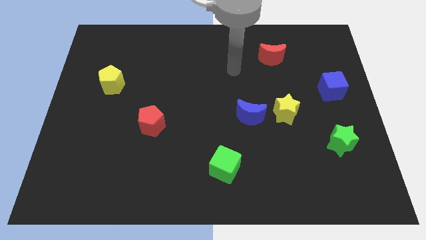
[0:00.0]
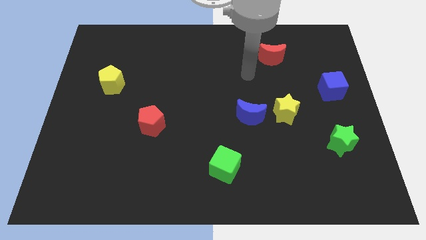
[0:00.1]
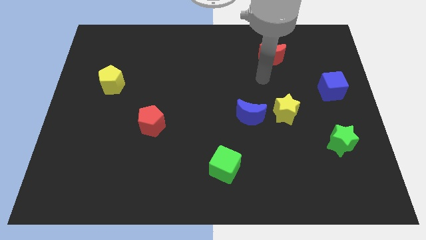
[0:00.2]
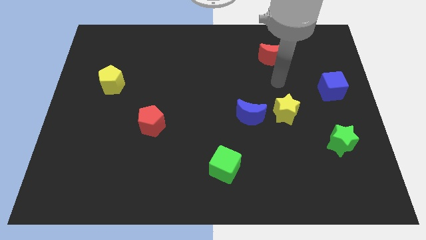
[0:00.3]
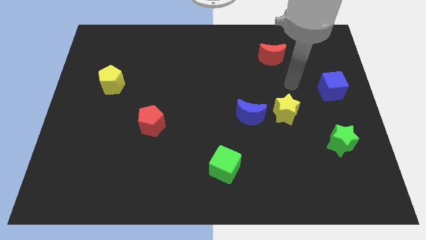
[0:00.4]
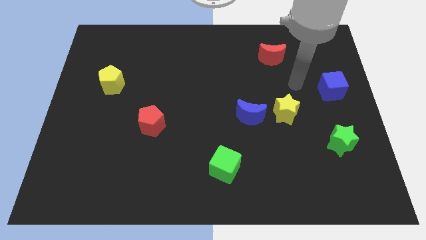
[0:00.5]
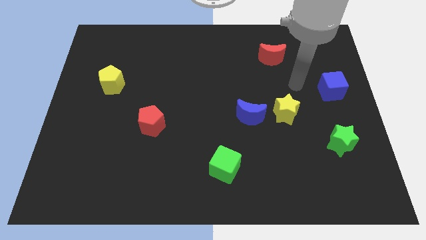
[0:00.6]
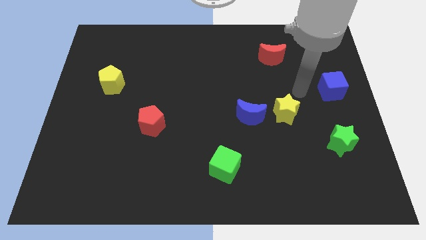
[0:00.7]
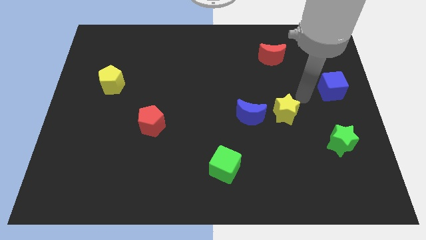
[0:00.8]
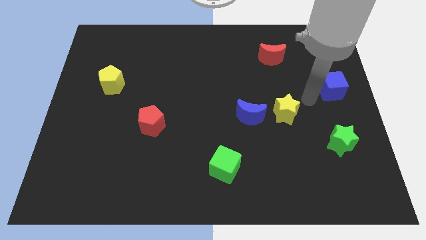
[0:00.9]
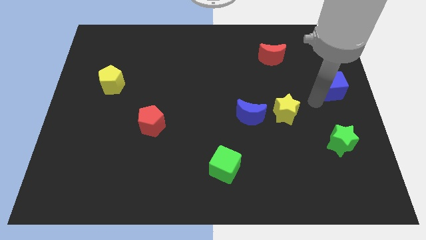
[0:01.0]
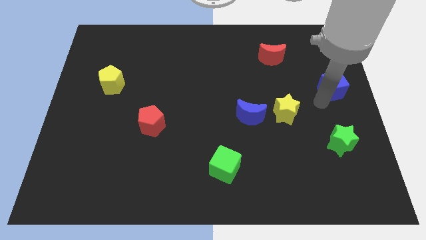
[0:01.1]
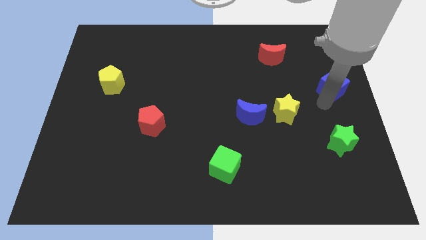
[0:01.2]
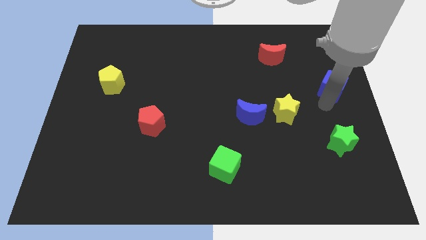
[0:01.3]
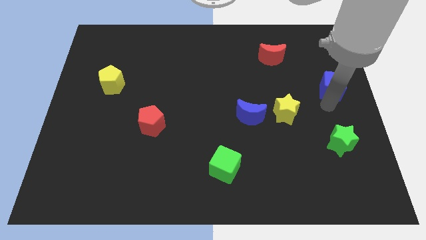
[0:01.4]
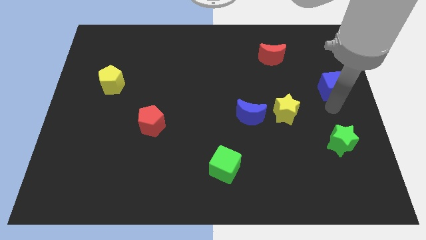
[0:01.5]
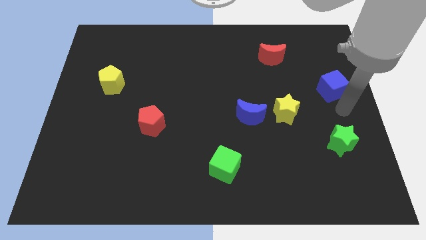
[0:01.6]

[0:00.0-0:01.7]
tap the bottom of the blue cube

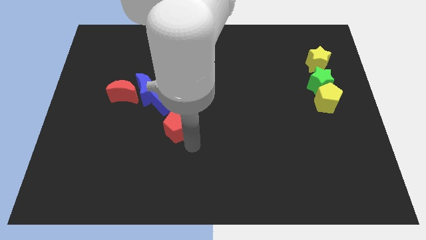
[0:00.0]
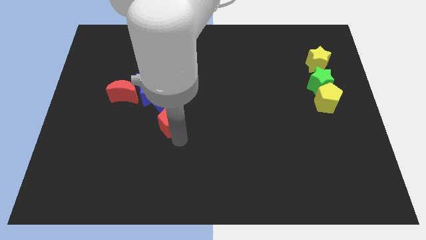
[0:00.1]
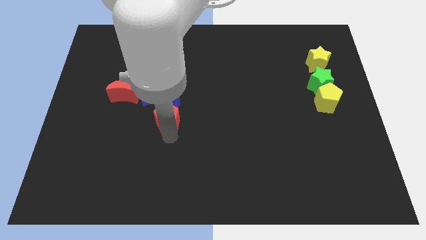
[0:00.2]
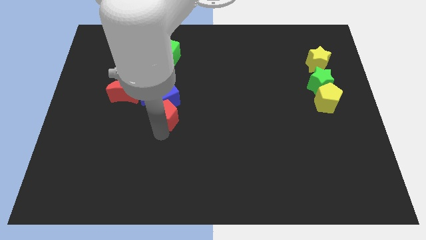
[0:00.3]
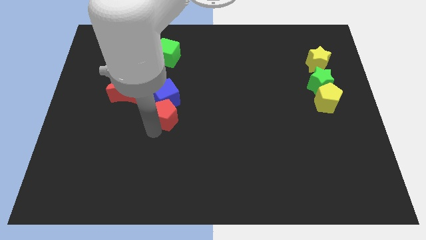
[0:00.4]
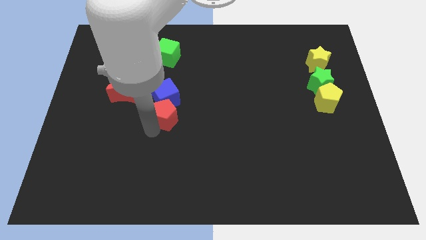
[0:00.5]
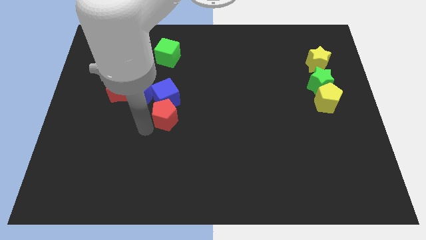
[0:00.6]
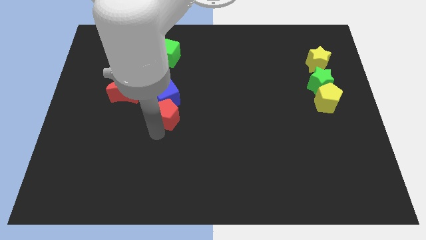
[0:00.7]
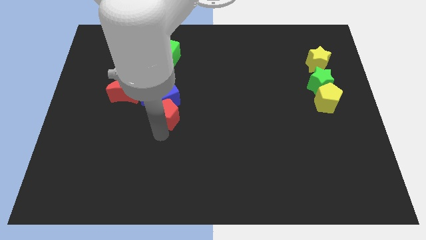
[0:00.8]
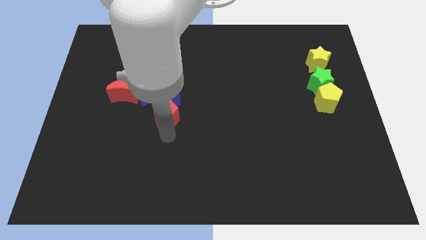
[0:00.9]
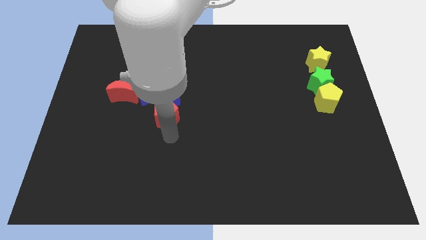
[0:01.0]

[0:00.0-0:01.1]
push red pentagon close to blue cube

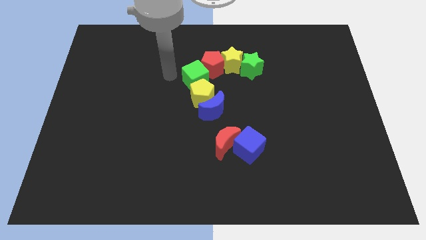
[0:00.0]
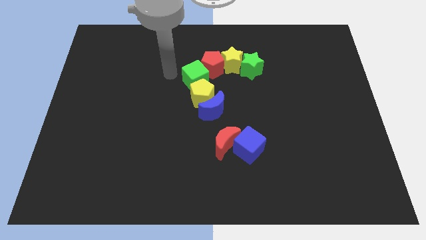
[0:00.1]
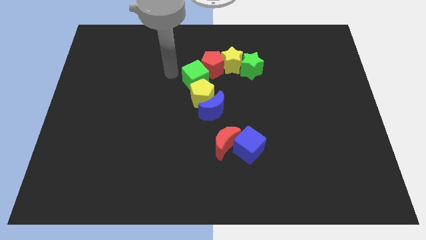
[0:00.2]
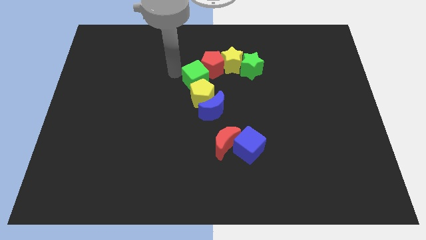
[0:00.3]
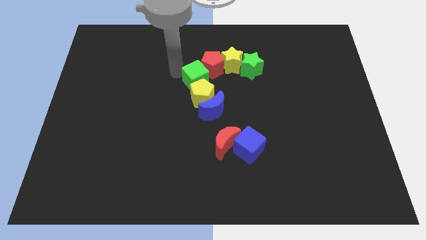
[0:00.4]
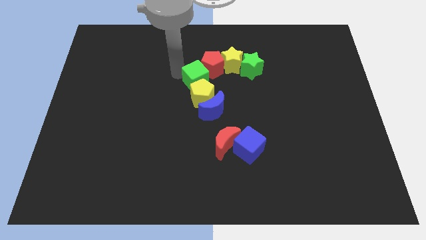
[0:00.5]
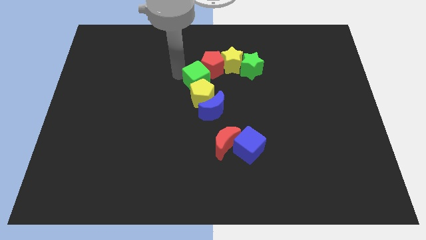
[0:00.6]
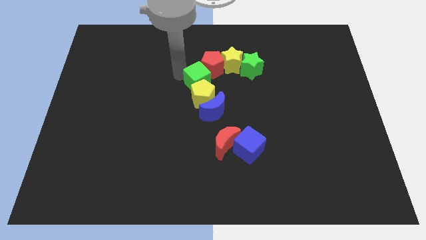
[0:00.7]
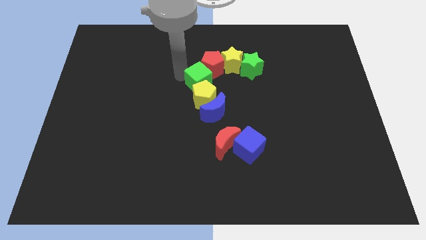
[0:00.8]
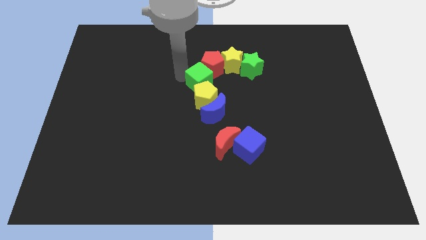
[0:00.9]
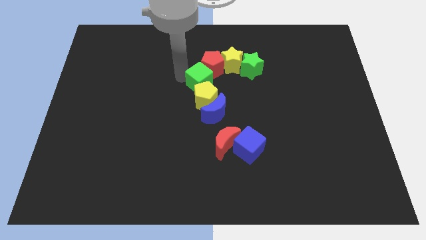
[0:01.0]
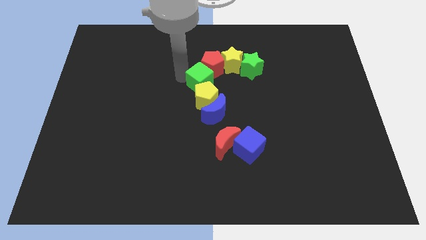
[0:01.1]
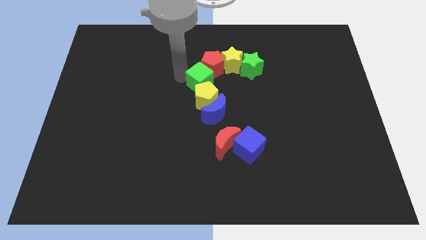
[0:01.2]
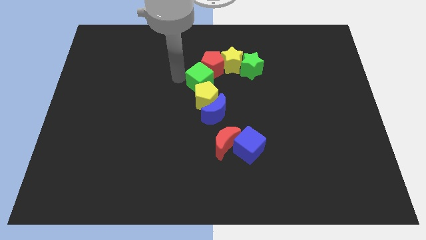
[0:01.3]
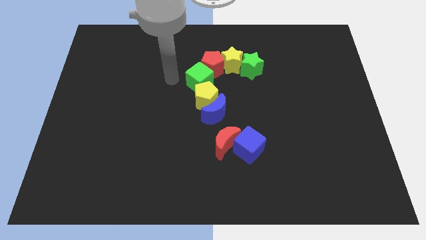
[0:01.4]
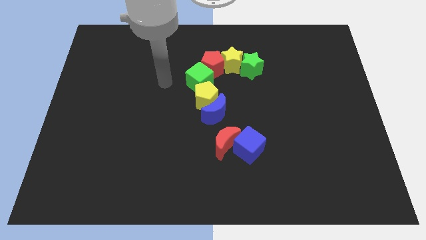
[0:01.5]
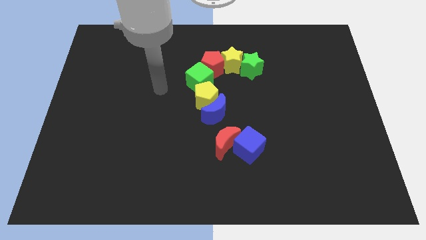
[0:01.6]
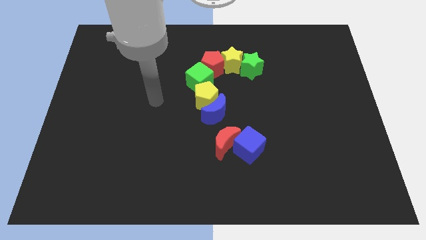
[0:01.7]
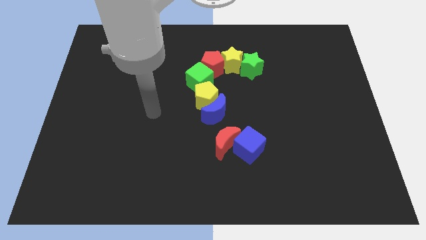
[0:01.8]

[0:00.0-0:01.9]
move the green cube to the bottom left of the red pentagon

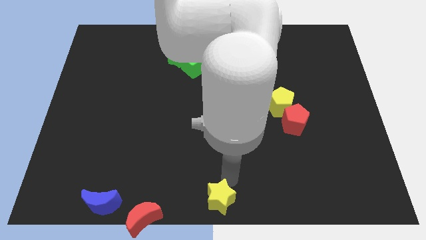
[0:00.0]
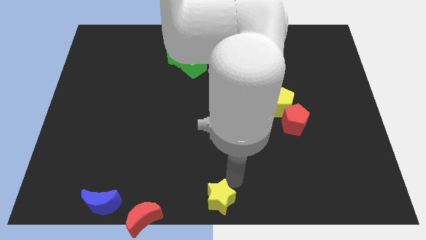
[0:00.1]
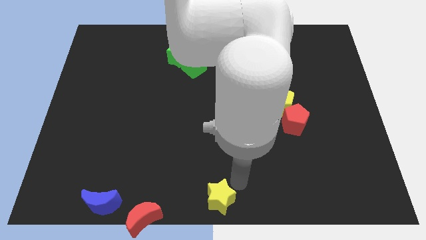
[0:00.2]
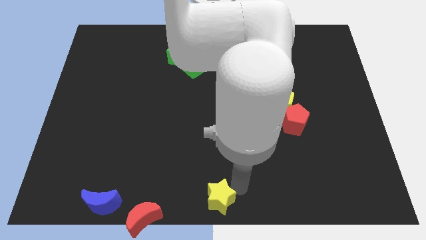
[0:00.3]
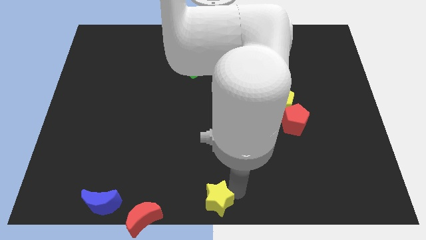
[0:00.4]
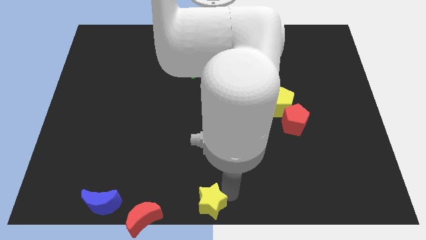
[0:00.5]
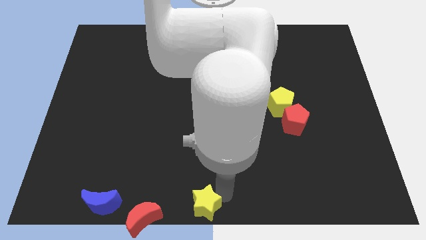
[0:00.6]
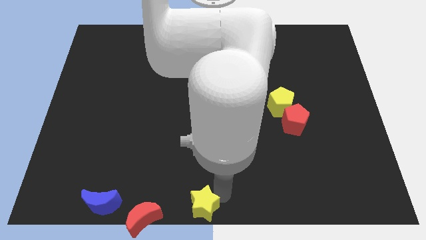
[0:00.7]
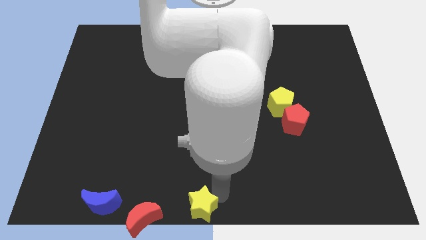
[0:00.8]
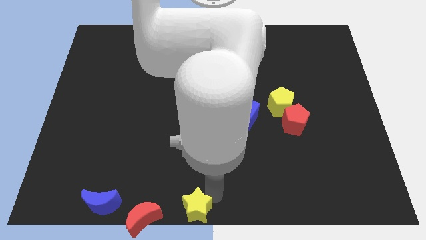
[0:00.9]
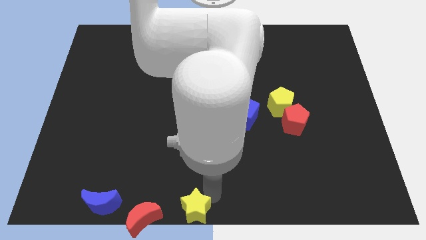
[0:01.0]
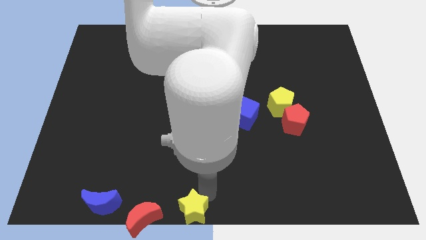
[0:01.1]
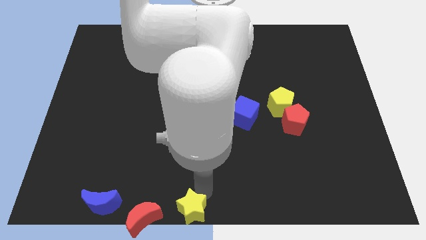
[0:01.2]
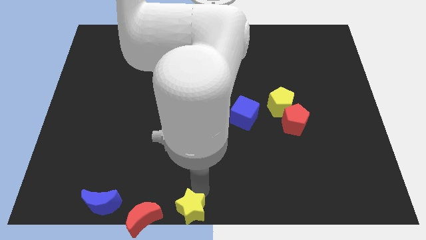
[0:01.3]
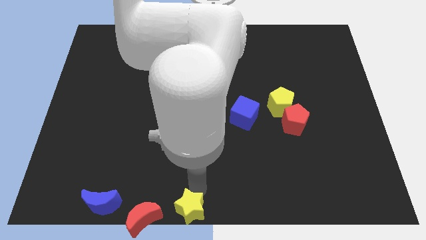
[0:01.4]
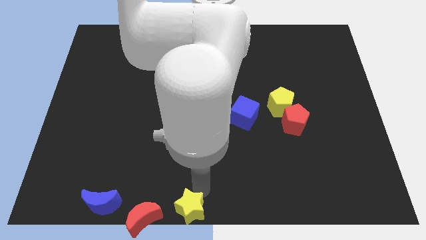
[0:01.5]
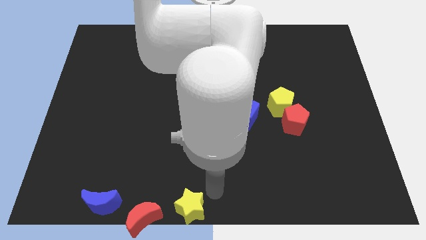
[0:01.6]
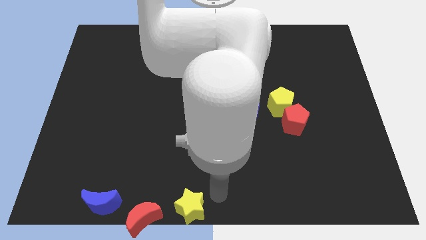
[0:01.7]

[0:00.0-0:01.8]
place yellow star to the right side of the red moon

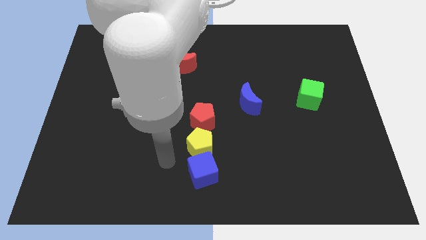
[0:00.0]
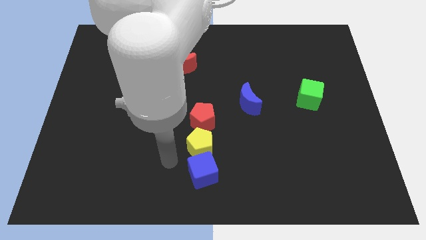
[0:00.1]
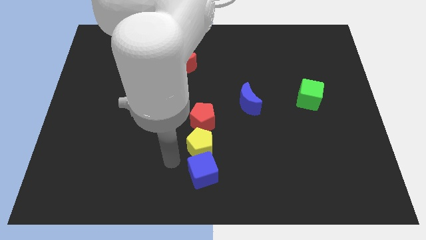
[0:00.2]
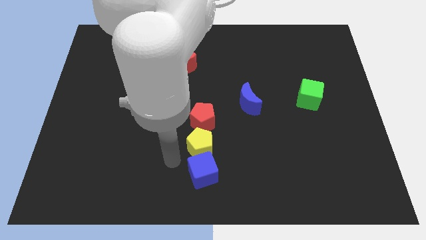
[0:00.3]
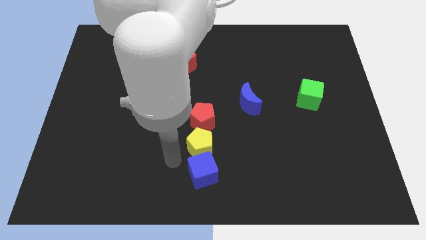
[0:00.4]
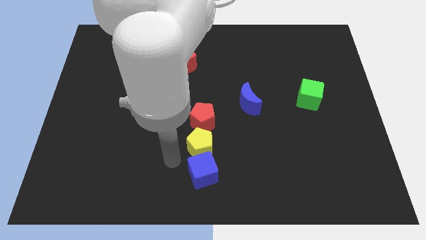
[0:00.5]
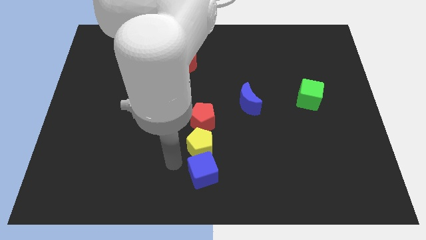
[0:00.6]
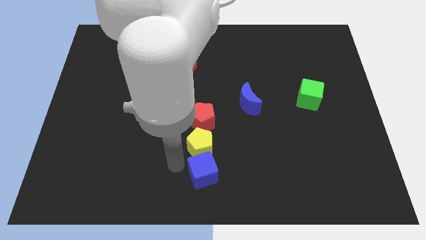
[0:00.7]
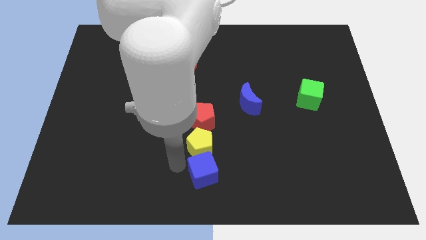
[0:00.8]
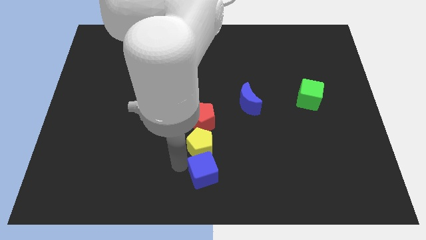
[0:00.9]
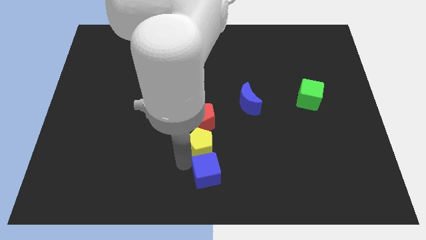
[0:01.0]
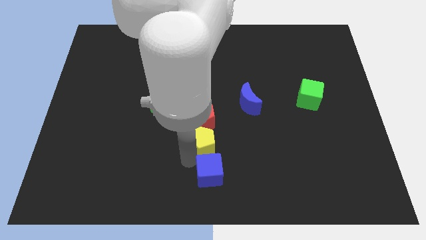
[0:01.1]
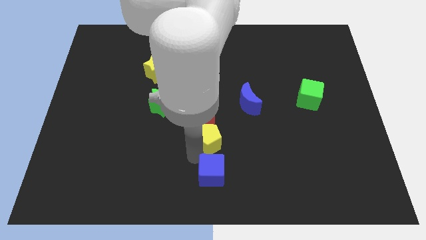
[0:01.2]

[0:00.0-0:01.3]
slightly push the yellow pentagon to the right side of the board

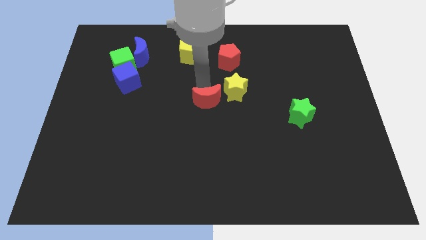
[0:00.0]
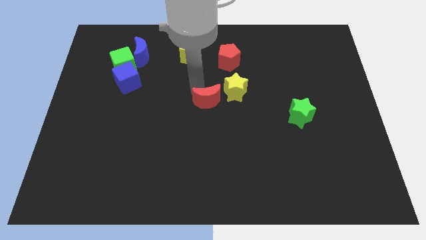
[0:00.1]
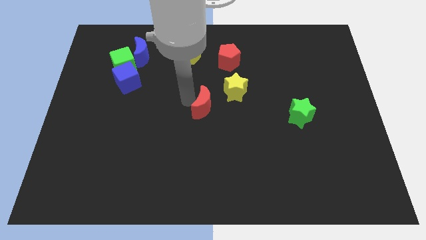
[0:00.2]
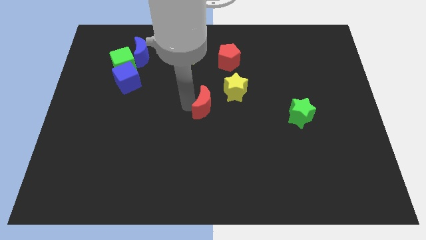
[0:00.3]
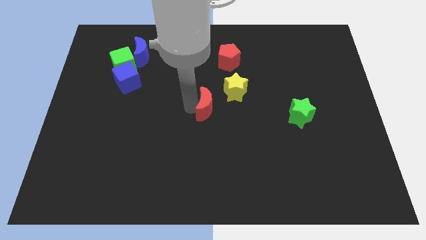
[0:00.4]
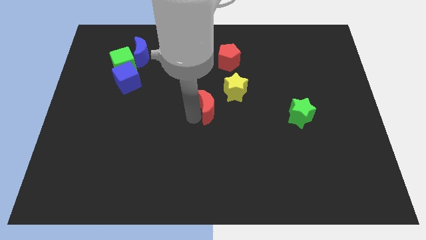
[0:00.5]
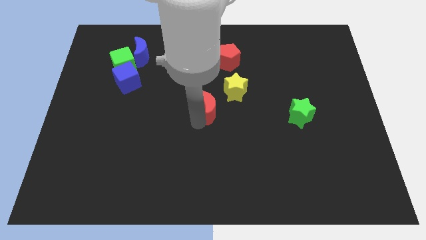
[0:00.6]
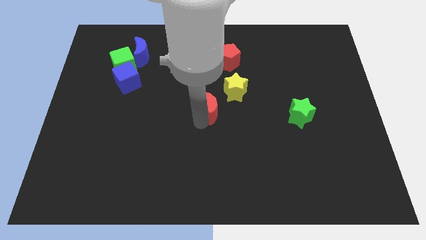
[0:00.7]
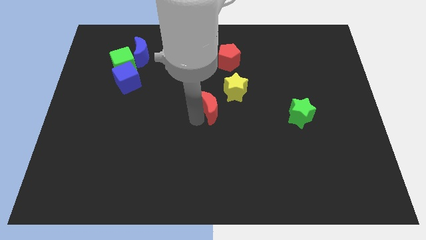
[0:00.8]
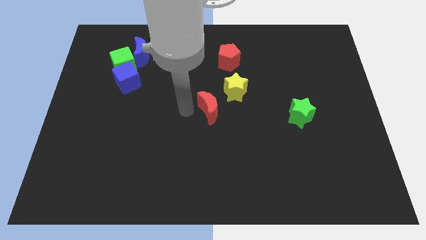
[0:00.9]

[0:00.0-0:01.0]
move the red crescent slightly to the centre of the board
